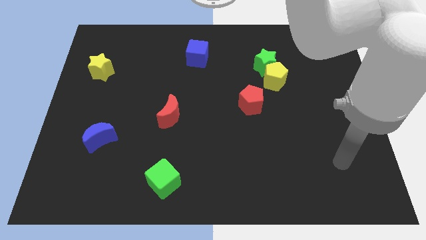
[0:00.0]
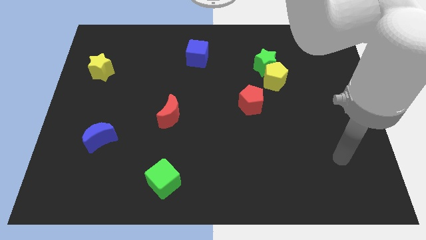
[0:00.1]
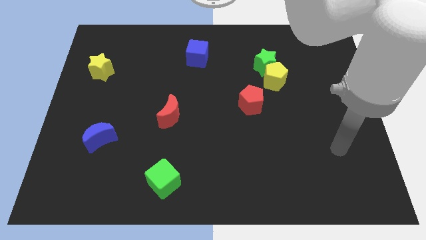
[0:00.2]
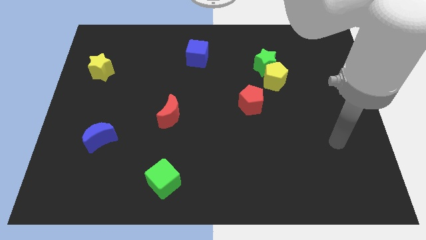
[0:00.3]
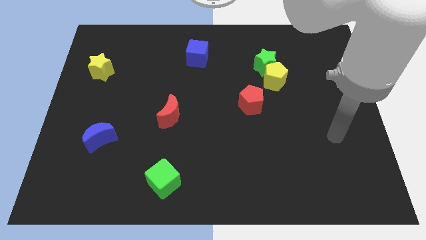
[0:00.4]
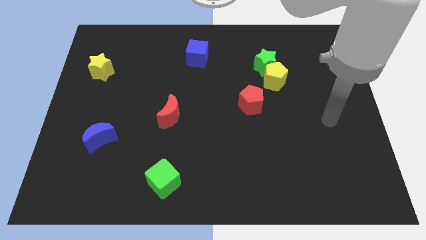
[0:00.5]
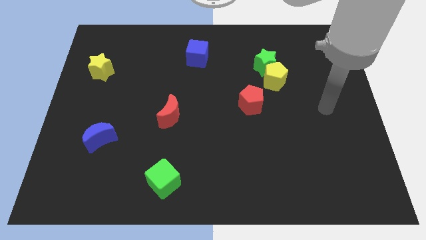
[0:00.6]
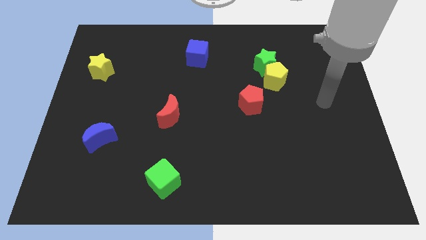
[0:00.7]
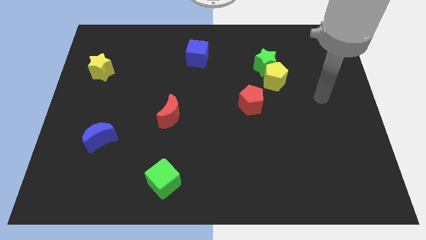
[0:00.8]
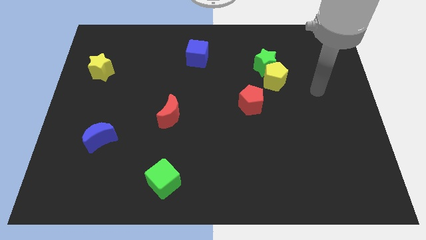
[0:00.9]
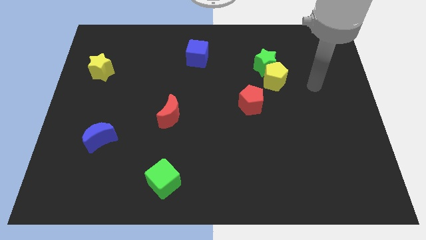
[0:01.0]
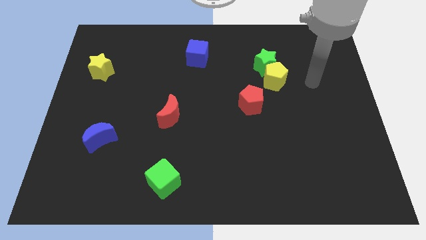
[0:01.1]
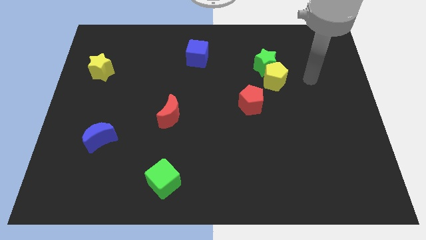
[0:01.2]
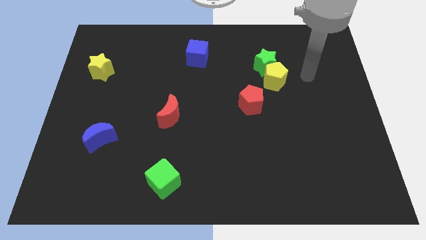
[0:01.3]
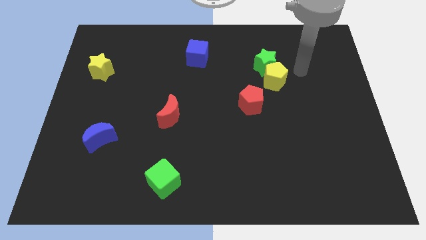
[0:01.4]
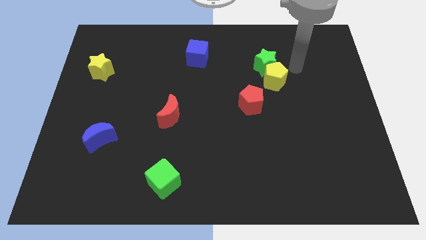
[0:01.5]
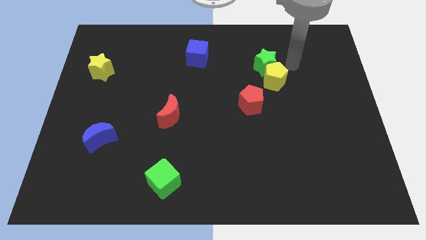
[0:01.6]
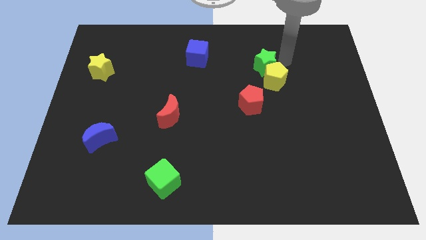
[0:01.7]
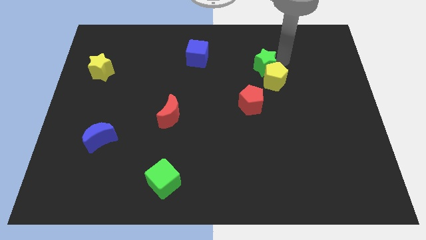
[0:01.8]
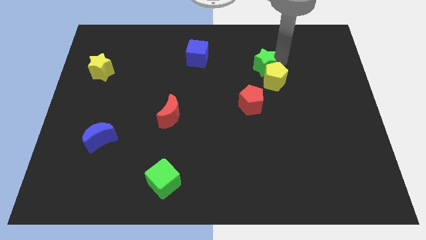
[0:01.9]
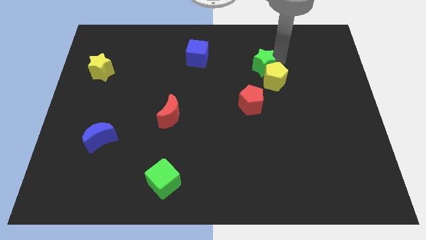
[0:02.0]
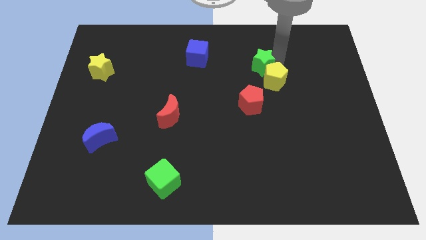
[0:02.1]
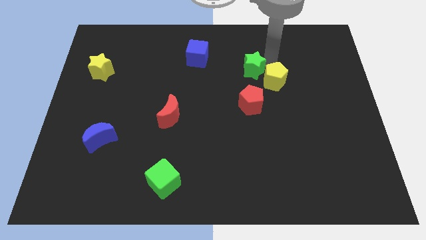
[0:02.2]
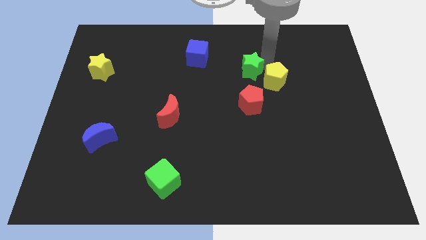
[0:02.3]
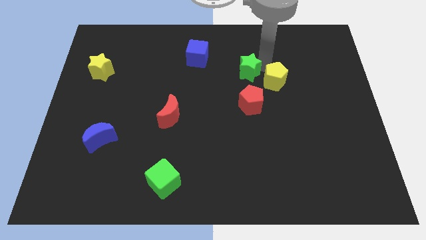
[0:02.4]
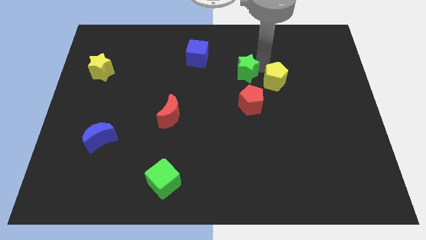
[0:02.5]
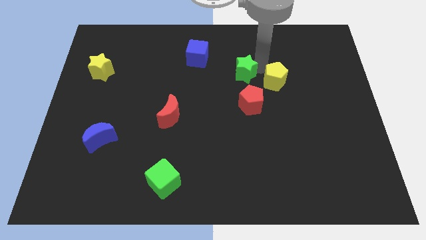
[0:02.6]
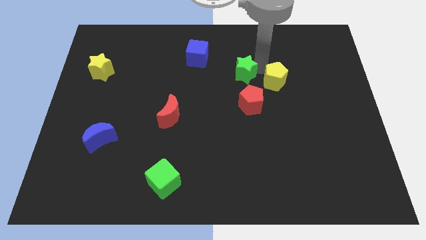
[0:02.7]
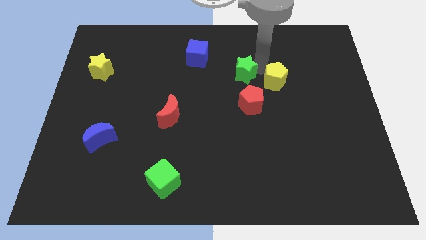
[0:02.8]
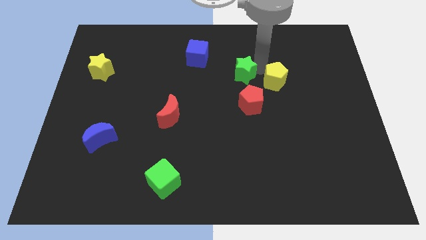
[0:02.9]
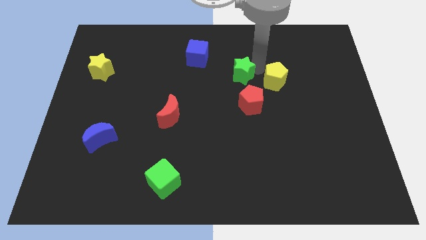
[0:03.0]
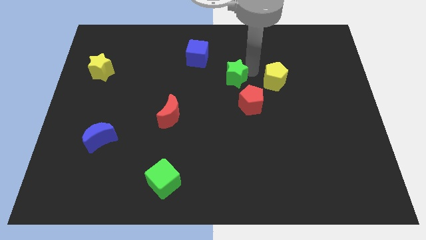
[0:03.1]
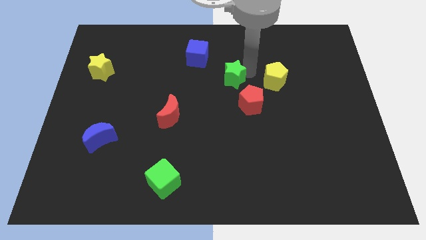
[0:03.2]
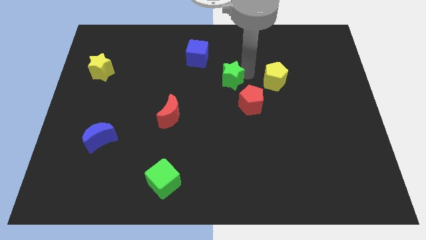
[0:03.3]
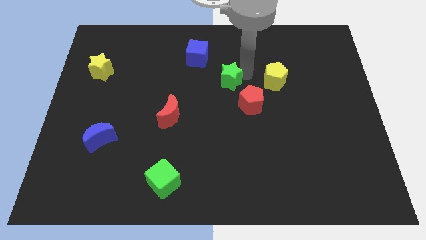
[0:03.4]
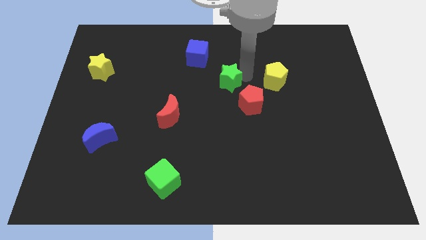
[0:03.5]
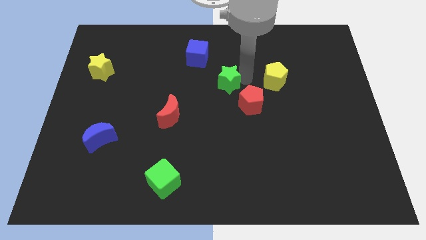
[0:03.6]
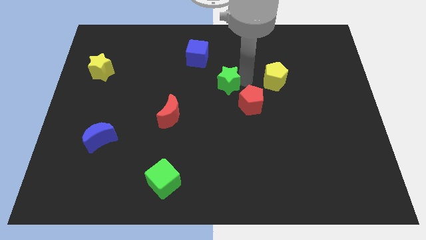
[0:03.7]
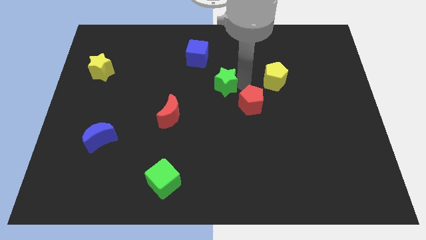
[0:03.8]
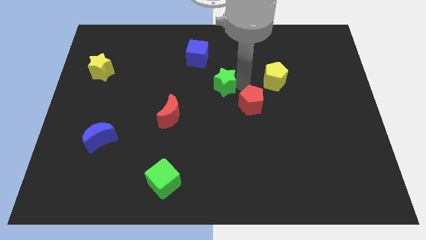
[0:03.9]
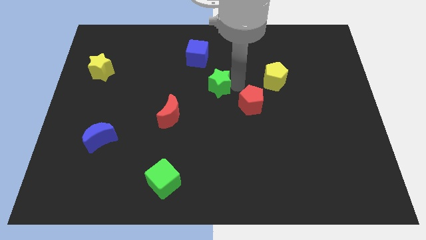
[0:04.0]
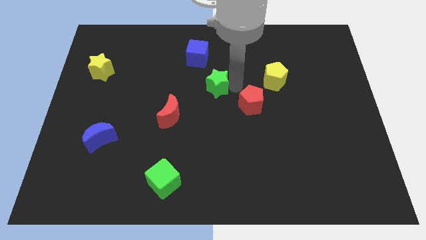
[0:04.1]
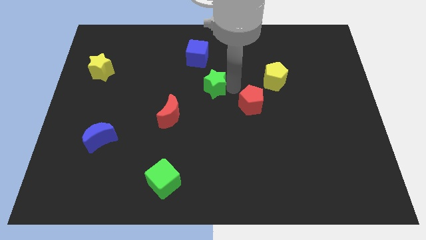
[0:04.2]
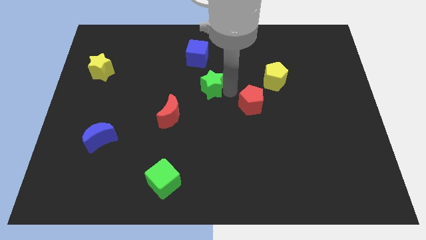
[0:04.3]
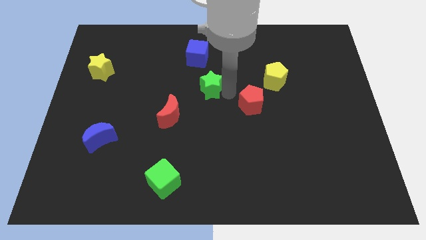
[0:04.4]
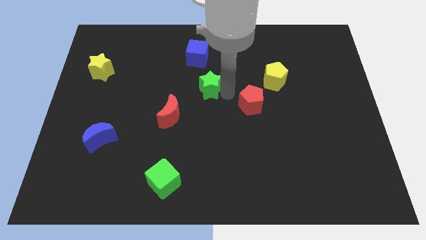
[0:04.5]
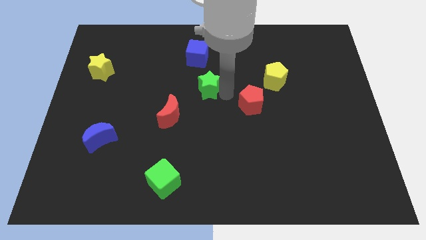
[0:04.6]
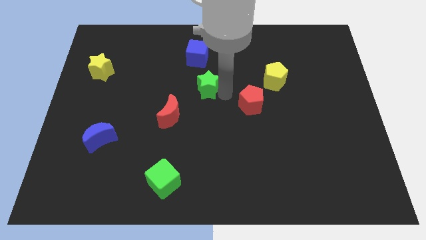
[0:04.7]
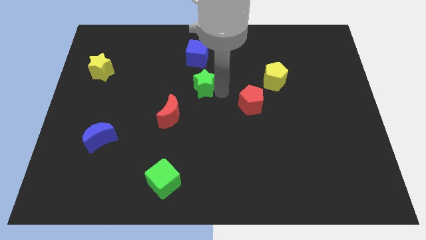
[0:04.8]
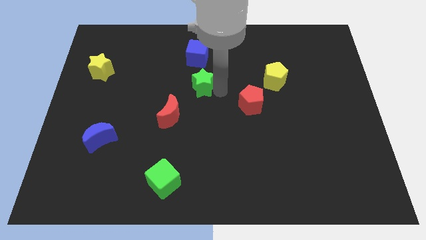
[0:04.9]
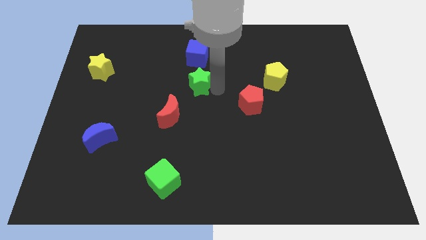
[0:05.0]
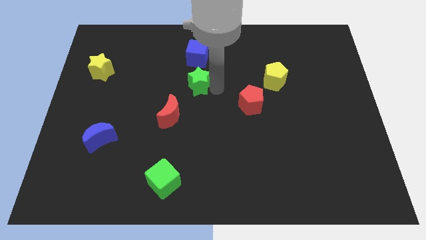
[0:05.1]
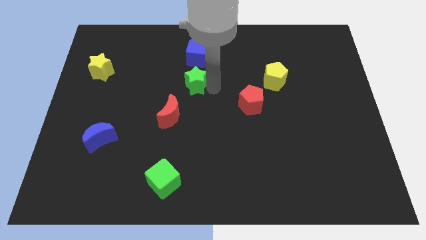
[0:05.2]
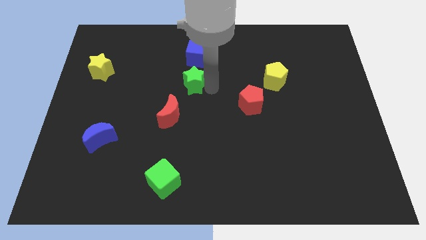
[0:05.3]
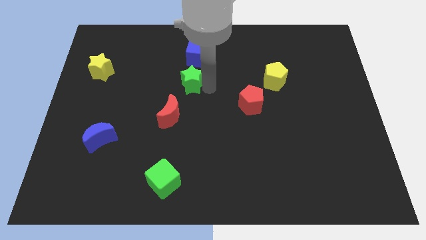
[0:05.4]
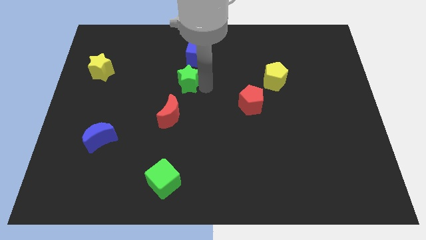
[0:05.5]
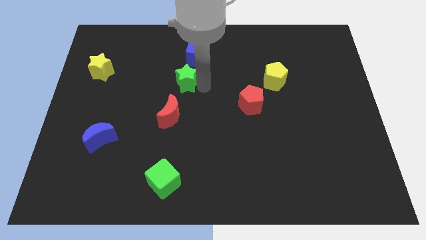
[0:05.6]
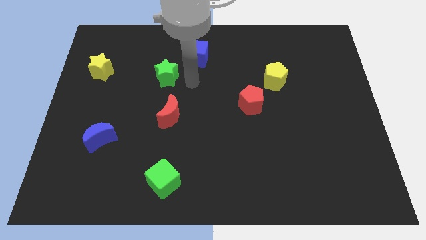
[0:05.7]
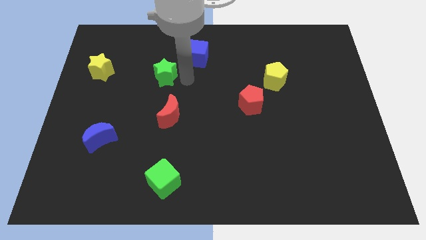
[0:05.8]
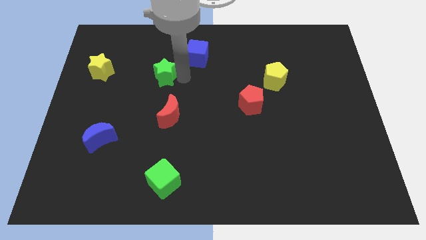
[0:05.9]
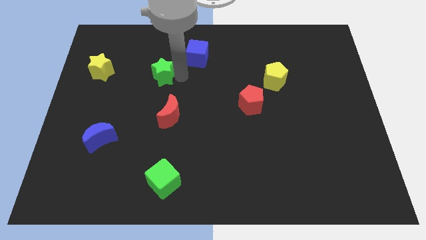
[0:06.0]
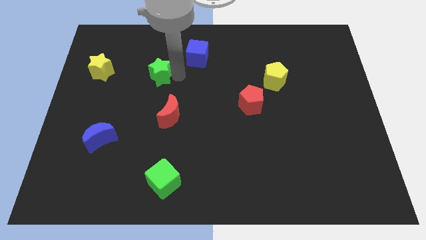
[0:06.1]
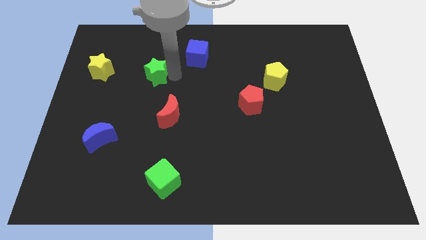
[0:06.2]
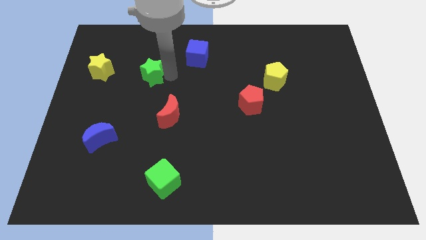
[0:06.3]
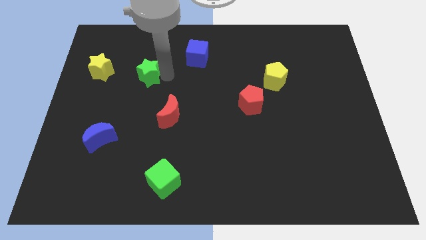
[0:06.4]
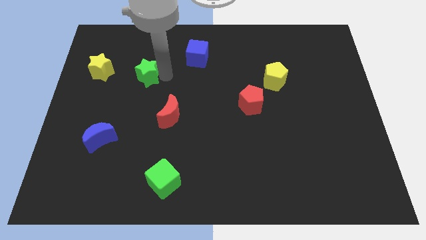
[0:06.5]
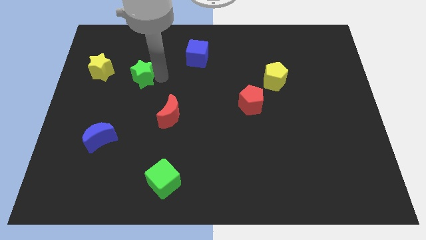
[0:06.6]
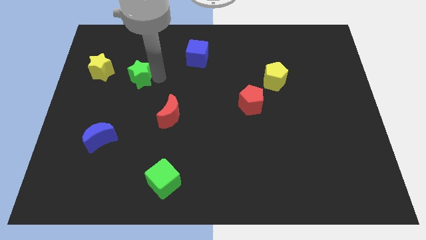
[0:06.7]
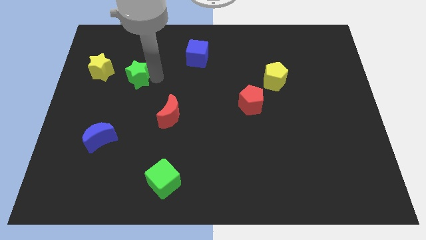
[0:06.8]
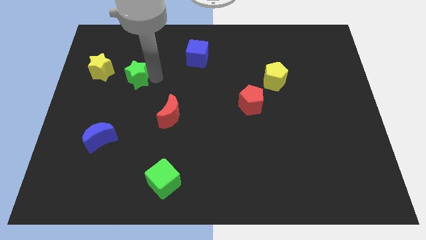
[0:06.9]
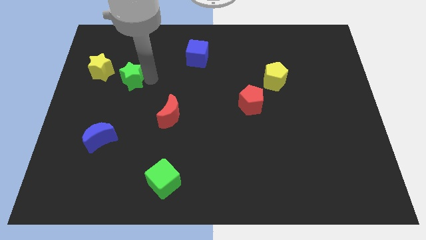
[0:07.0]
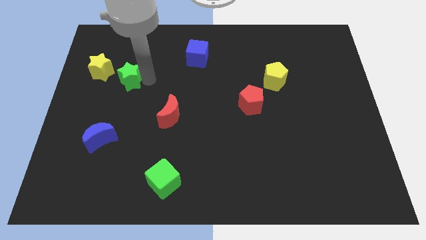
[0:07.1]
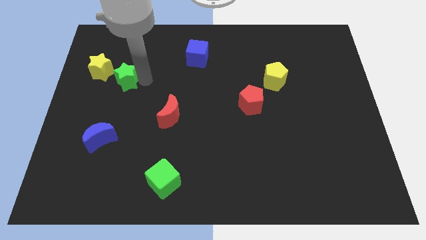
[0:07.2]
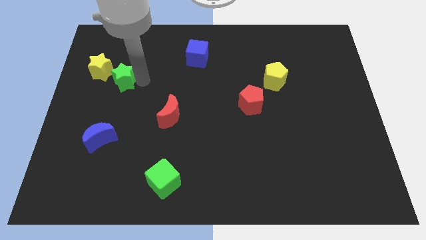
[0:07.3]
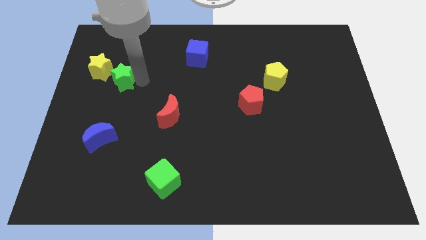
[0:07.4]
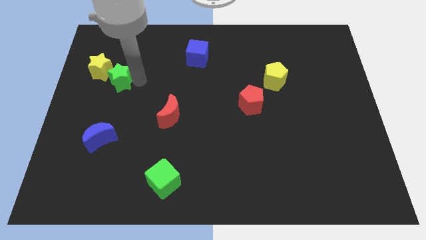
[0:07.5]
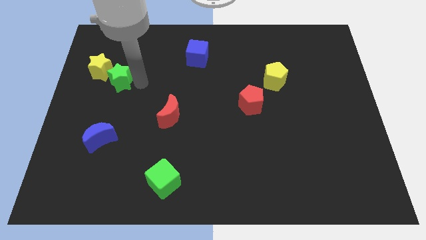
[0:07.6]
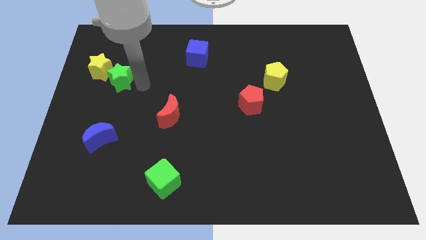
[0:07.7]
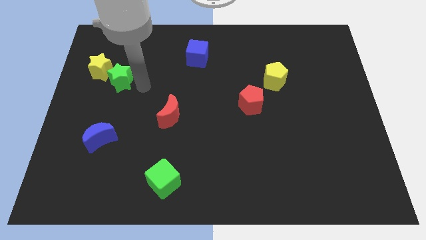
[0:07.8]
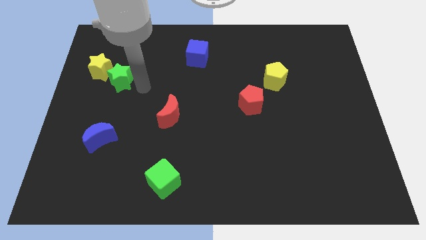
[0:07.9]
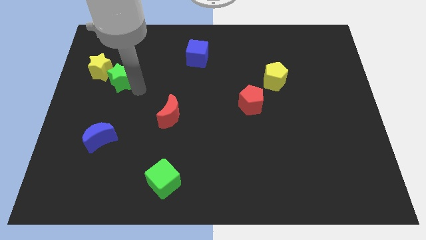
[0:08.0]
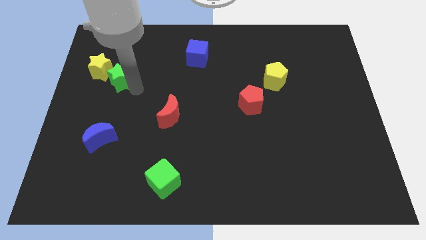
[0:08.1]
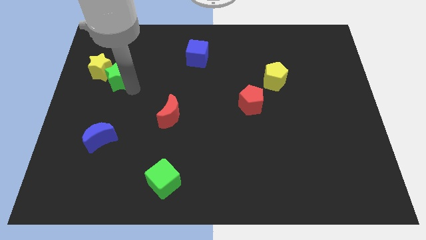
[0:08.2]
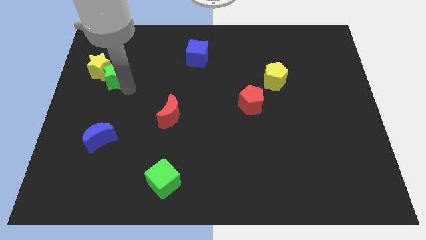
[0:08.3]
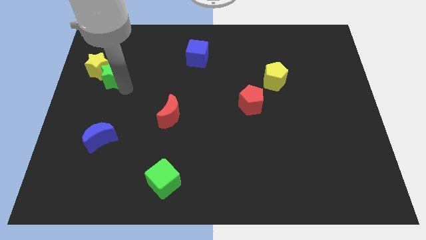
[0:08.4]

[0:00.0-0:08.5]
push the green star next to the yellow star
